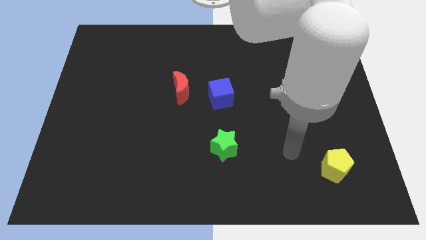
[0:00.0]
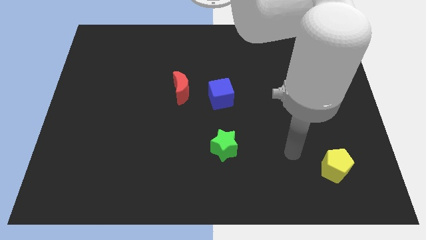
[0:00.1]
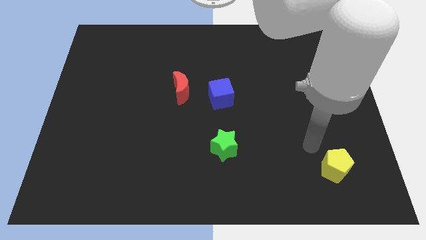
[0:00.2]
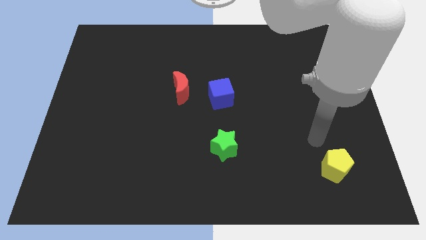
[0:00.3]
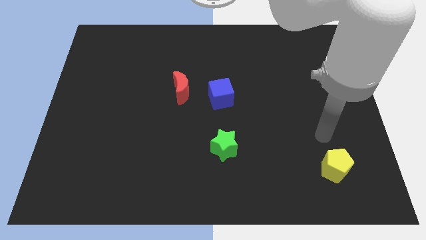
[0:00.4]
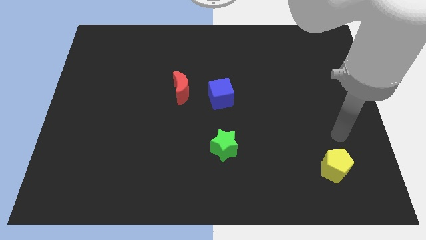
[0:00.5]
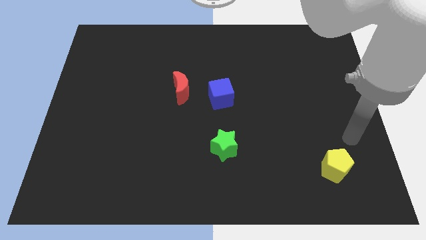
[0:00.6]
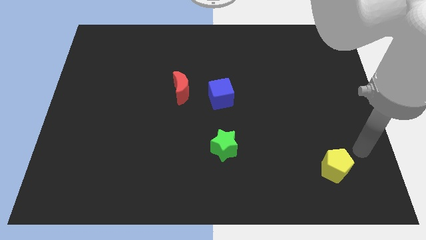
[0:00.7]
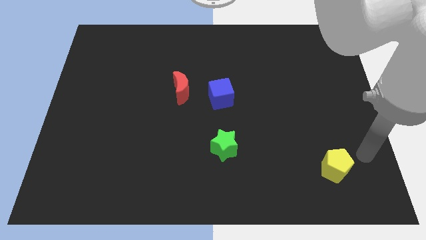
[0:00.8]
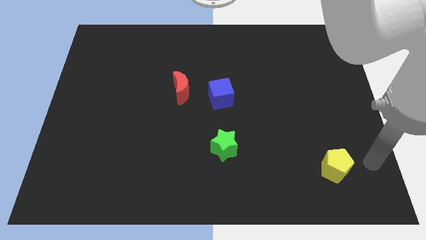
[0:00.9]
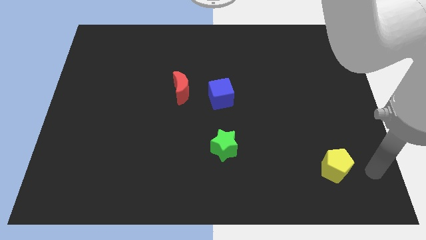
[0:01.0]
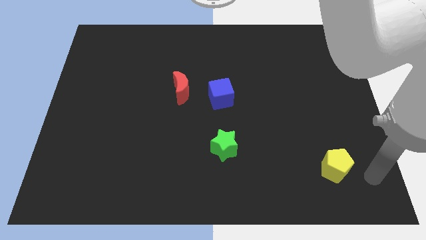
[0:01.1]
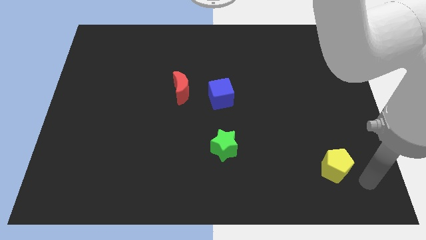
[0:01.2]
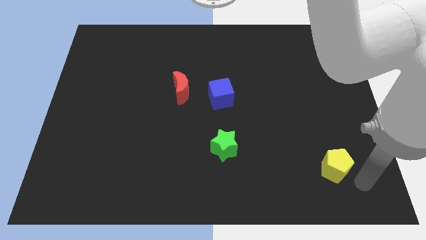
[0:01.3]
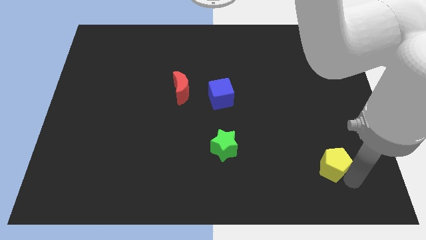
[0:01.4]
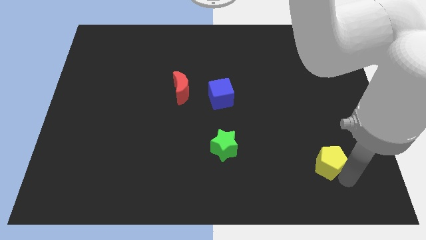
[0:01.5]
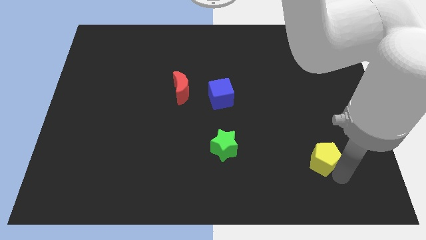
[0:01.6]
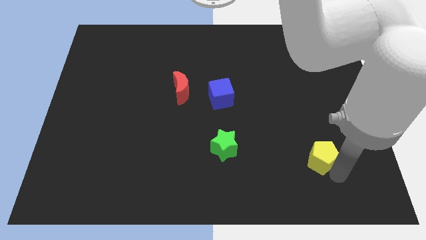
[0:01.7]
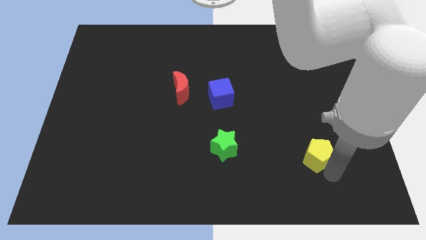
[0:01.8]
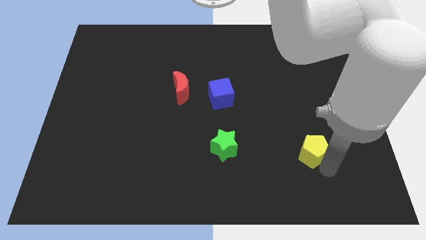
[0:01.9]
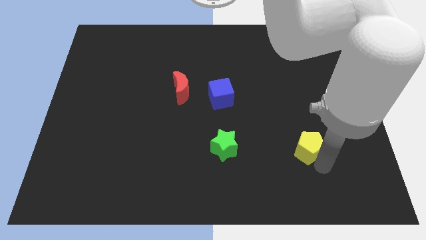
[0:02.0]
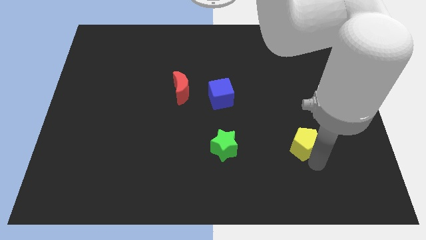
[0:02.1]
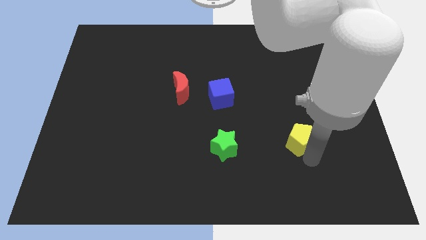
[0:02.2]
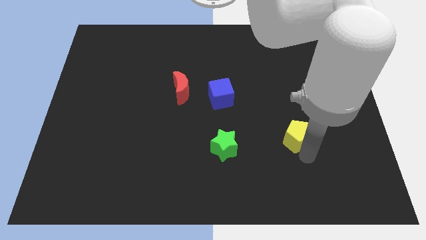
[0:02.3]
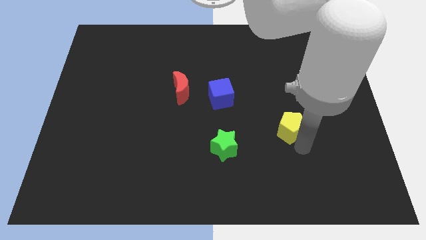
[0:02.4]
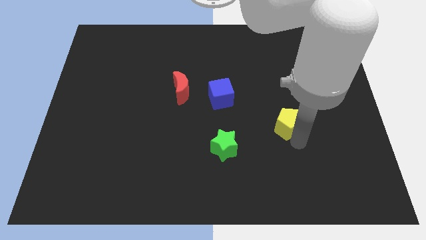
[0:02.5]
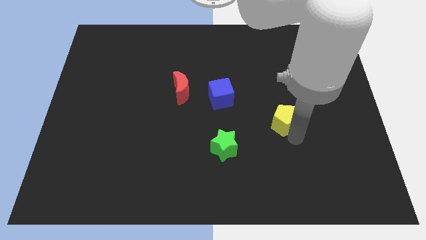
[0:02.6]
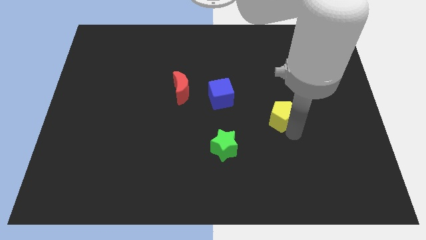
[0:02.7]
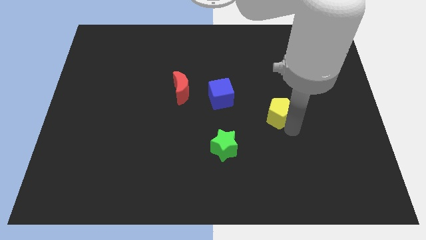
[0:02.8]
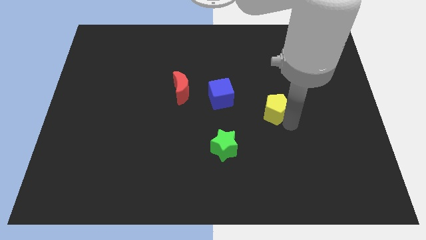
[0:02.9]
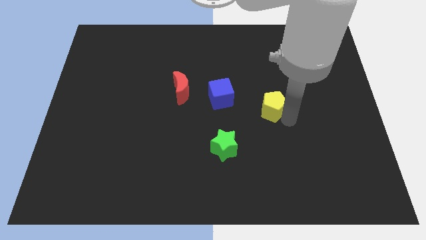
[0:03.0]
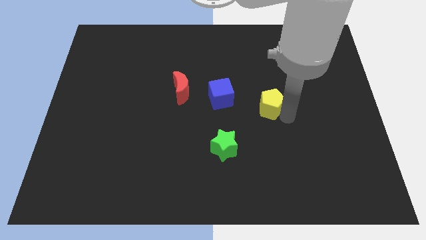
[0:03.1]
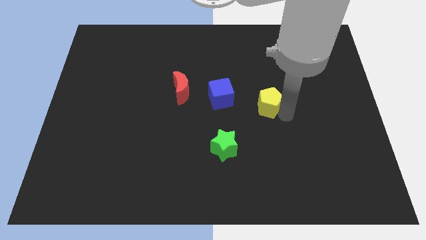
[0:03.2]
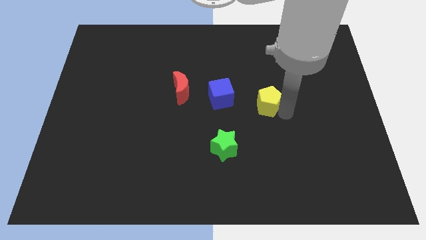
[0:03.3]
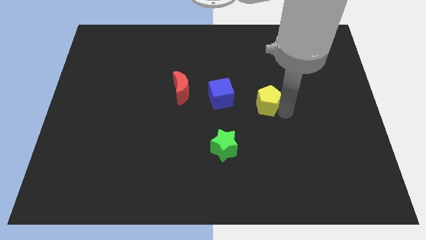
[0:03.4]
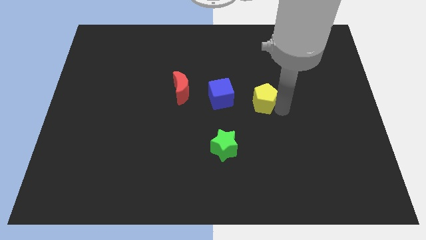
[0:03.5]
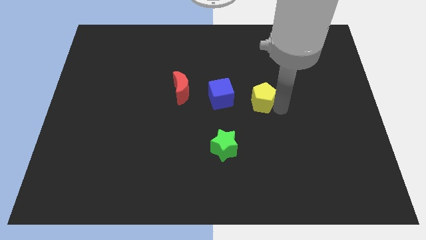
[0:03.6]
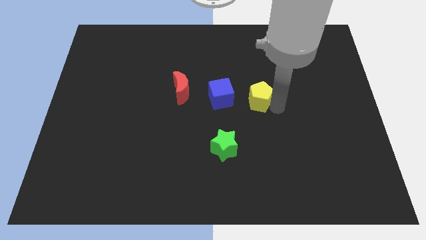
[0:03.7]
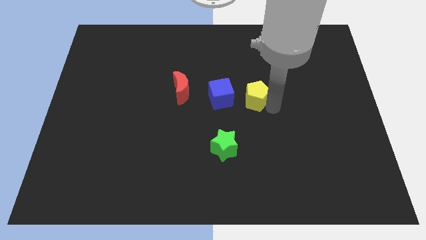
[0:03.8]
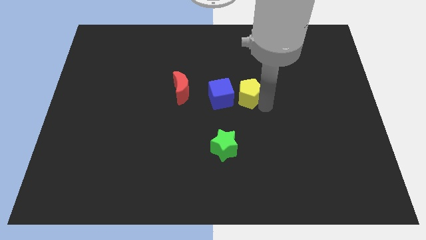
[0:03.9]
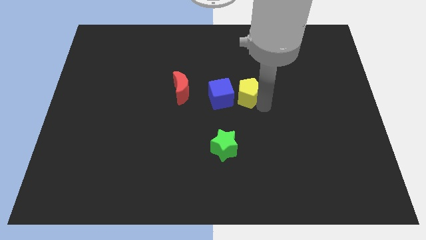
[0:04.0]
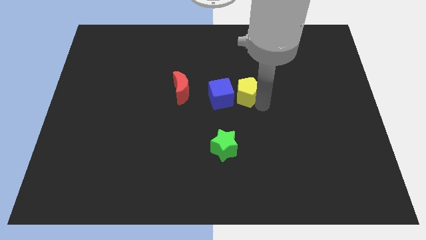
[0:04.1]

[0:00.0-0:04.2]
push the yellow pentagon close to the blue block

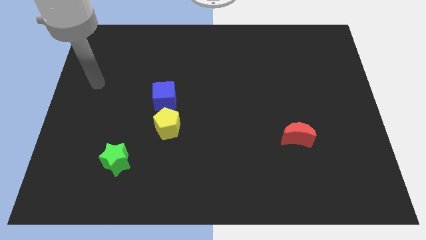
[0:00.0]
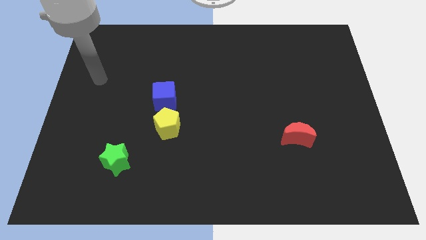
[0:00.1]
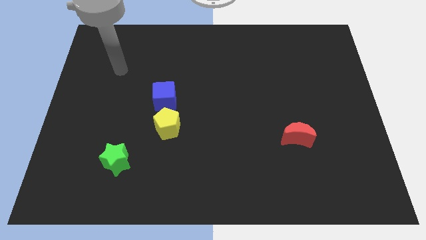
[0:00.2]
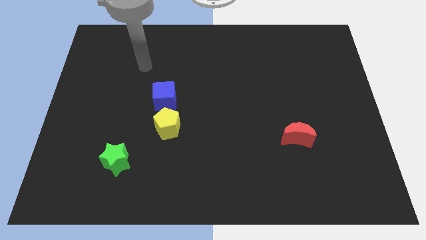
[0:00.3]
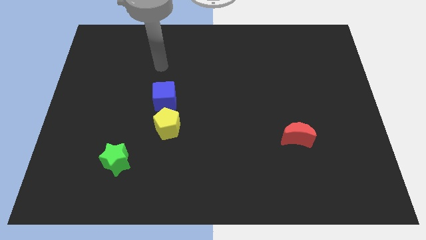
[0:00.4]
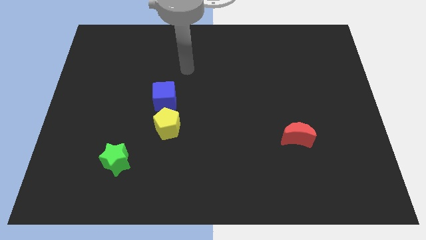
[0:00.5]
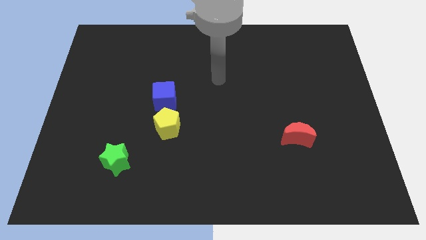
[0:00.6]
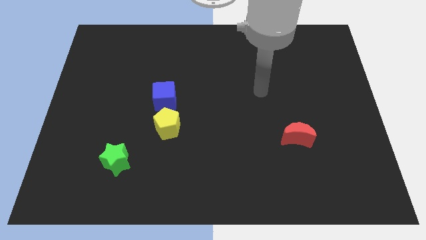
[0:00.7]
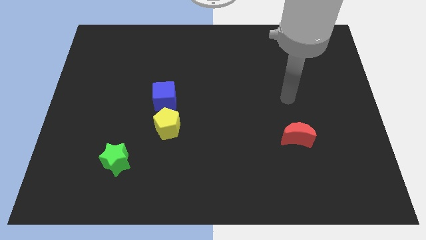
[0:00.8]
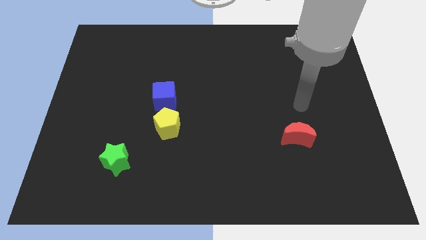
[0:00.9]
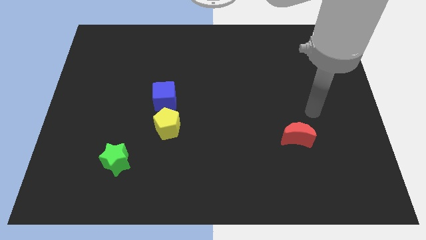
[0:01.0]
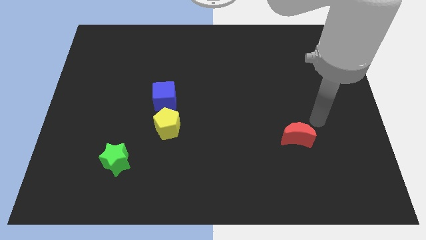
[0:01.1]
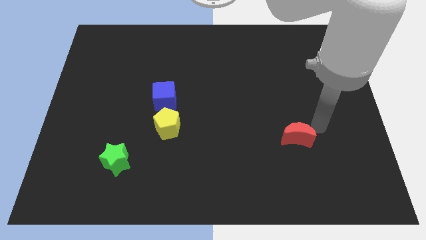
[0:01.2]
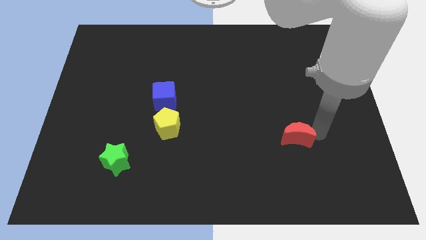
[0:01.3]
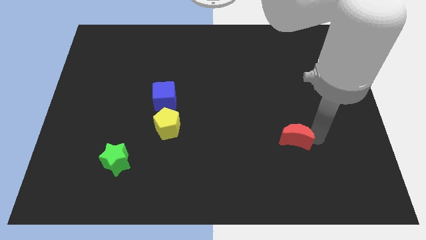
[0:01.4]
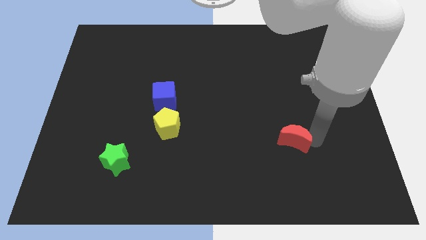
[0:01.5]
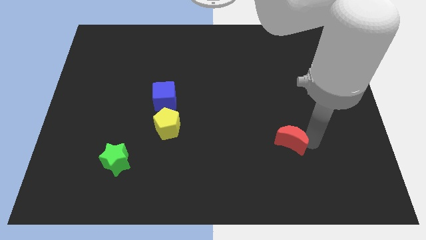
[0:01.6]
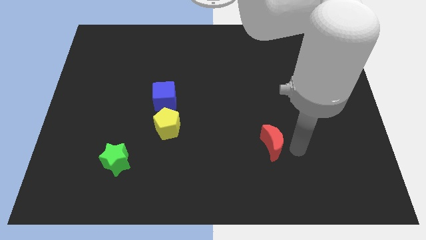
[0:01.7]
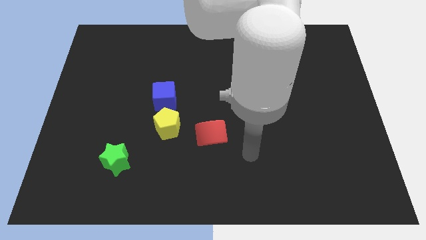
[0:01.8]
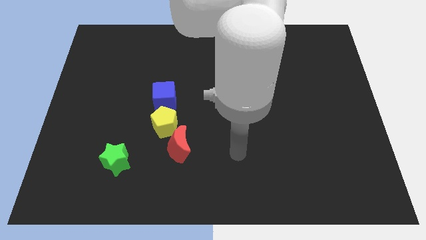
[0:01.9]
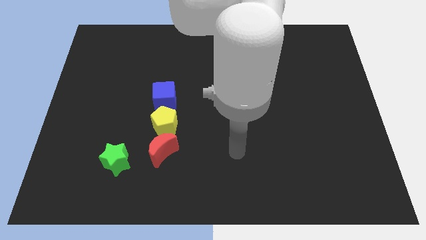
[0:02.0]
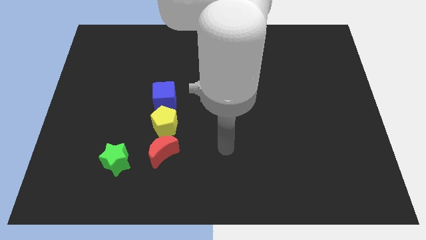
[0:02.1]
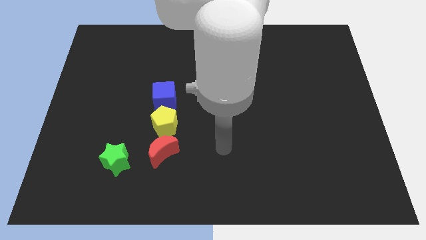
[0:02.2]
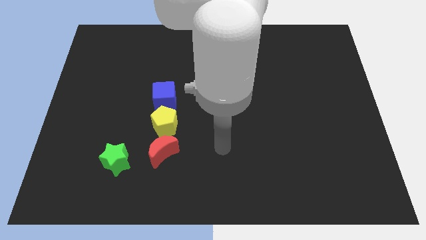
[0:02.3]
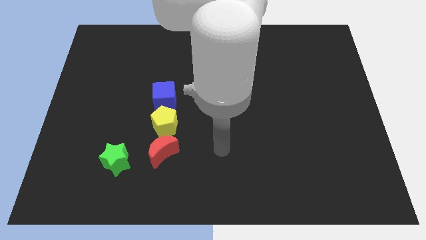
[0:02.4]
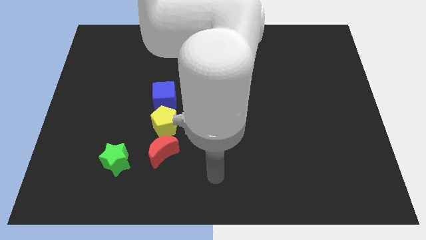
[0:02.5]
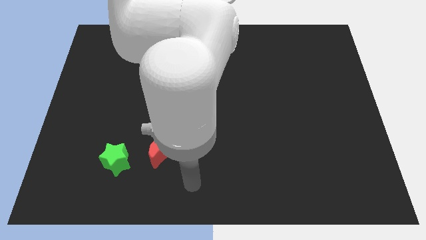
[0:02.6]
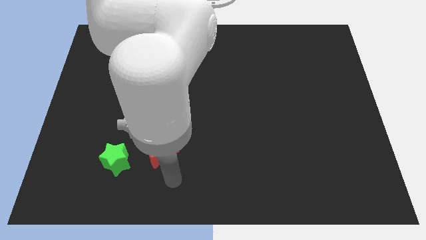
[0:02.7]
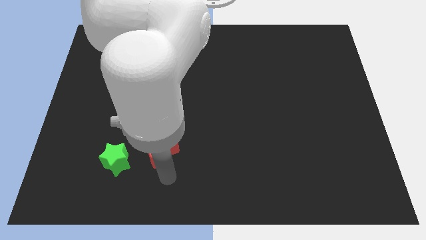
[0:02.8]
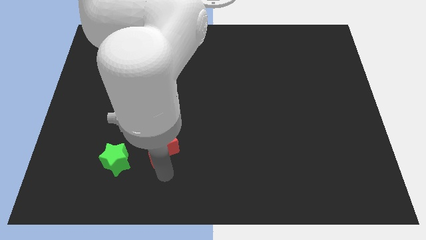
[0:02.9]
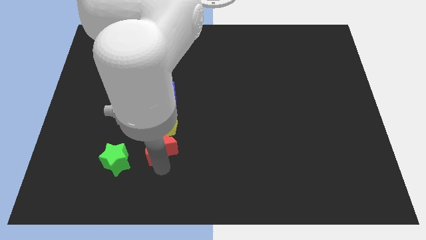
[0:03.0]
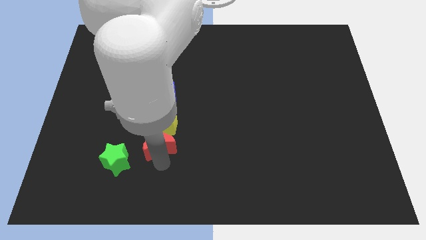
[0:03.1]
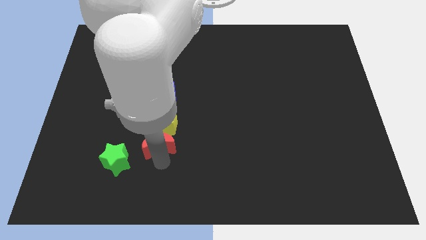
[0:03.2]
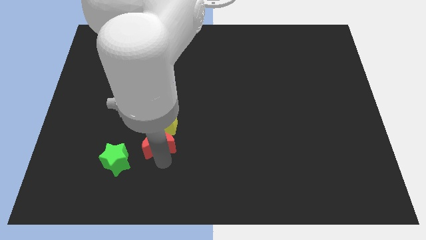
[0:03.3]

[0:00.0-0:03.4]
put the red block close to the yellow block

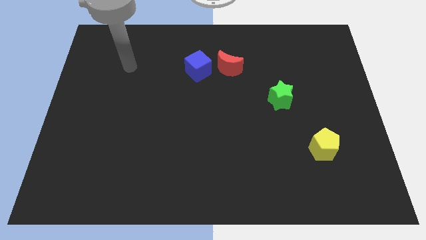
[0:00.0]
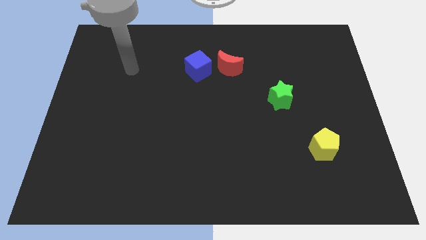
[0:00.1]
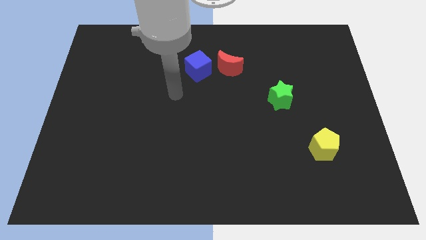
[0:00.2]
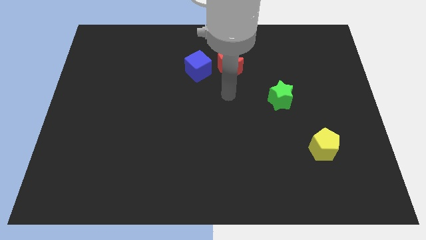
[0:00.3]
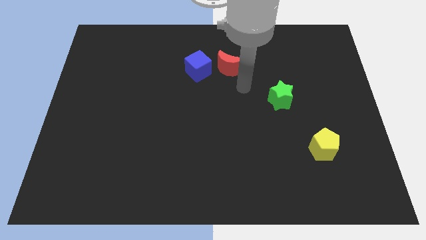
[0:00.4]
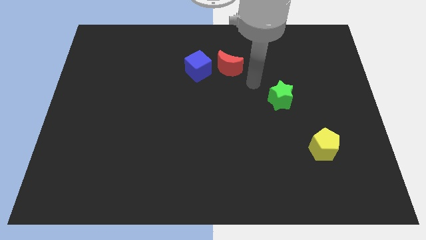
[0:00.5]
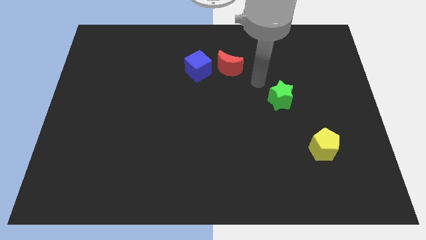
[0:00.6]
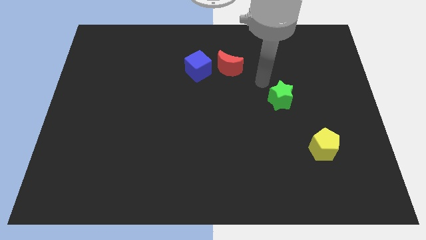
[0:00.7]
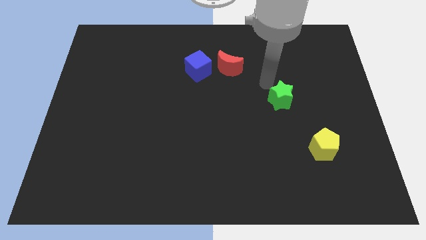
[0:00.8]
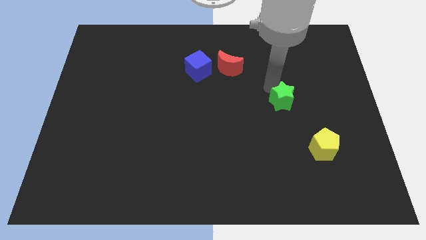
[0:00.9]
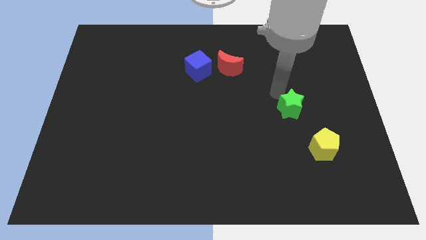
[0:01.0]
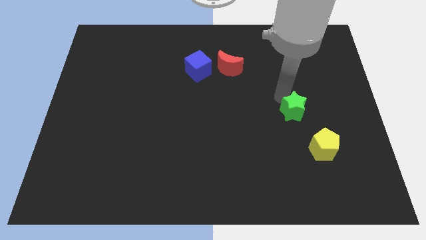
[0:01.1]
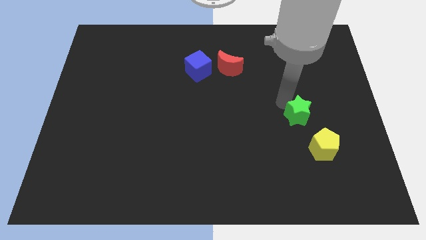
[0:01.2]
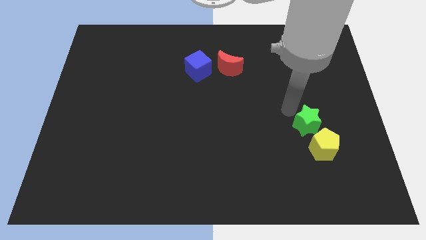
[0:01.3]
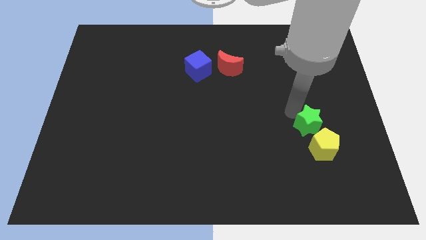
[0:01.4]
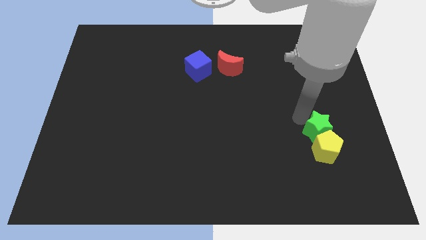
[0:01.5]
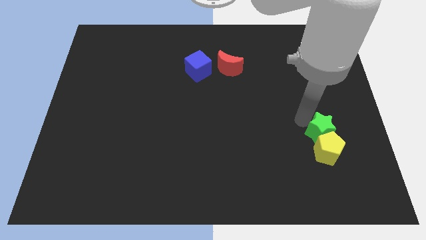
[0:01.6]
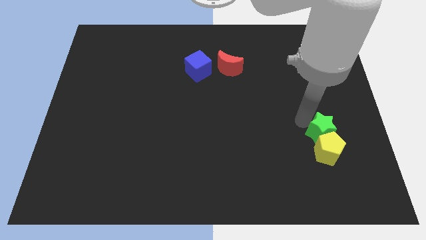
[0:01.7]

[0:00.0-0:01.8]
put the green star next to the pentagon
